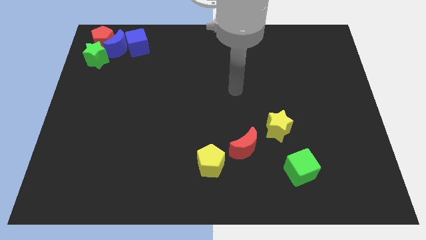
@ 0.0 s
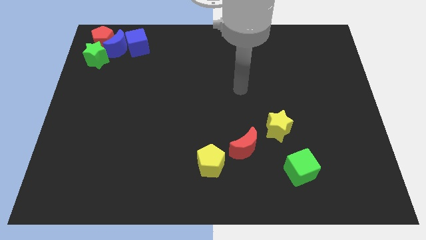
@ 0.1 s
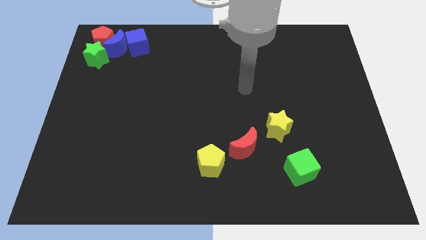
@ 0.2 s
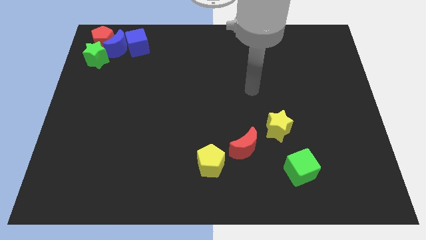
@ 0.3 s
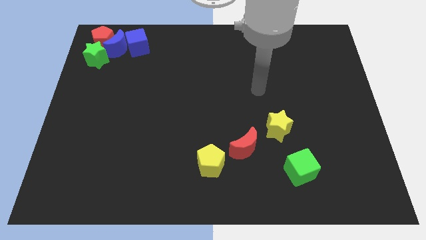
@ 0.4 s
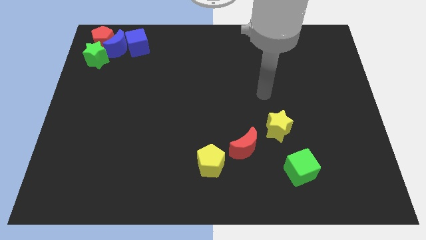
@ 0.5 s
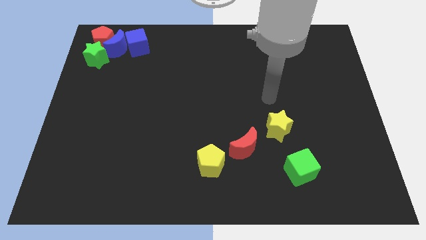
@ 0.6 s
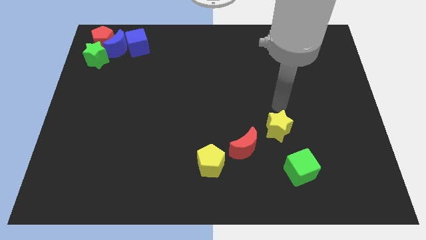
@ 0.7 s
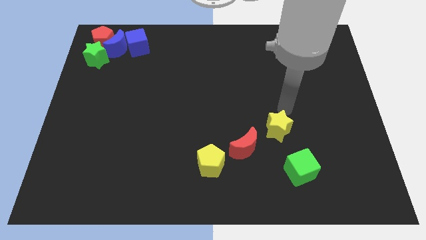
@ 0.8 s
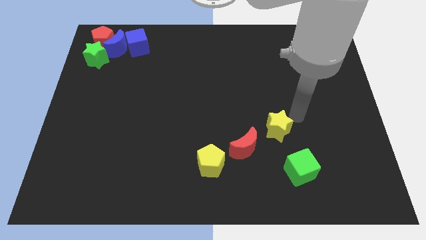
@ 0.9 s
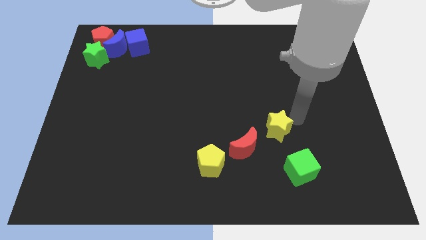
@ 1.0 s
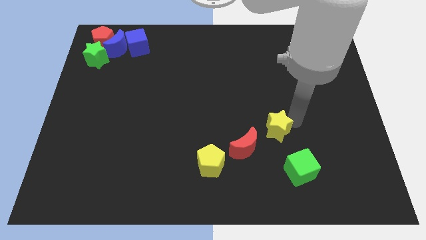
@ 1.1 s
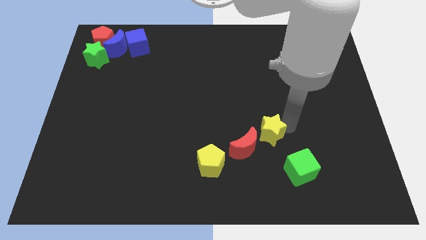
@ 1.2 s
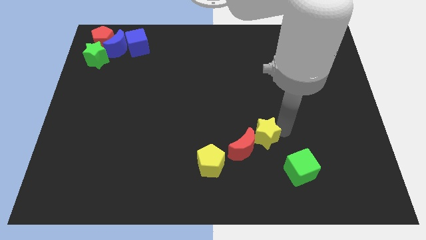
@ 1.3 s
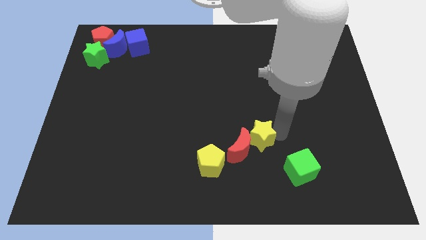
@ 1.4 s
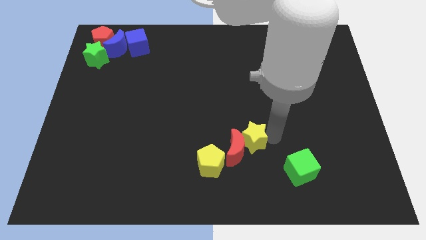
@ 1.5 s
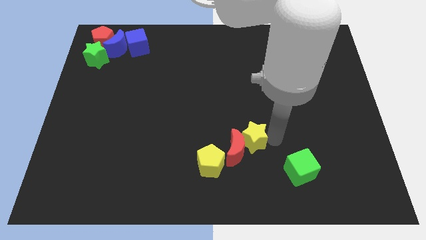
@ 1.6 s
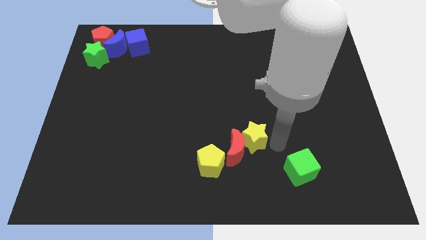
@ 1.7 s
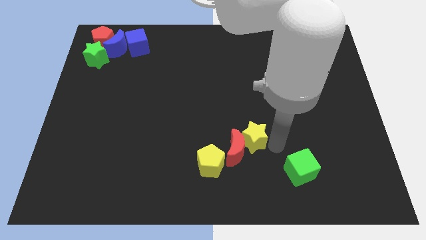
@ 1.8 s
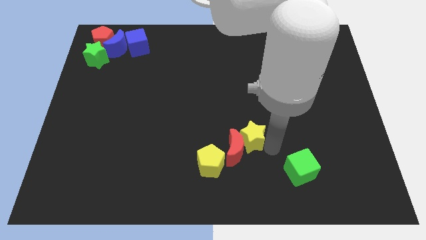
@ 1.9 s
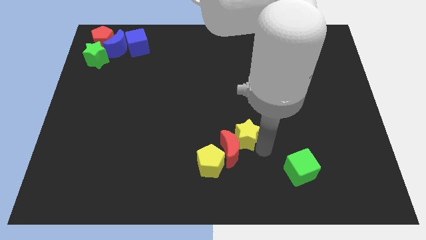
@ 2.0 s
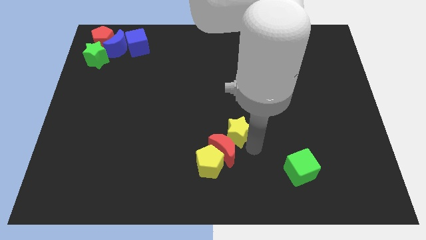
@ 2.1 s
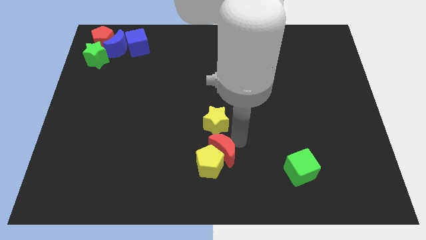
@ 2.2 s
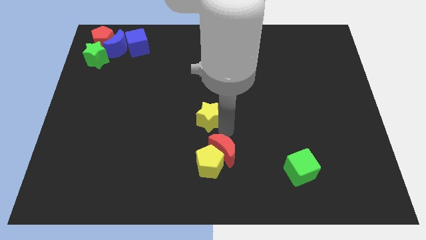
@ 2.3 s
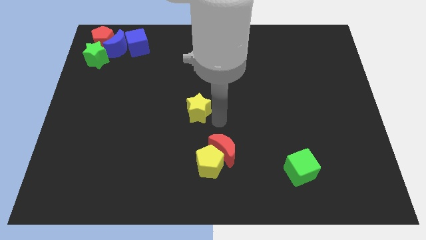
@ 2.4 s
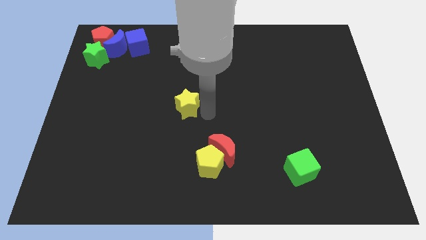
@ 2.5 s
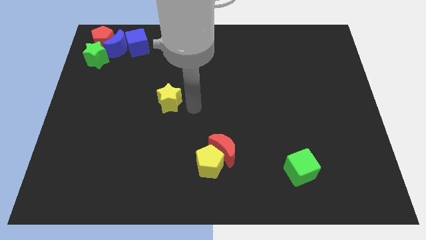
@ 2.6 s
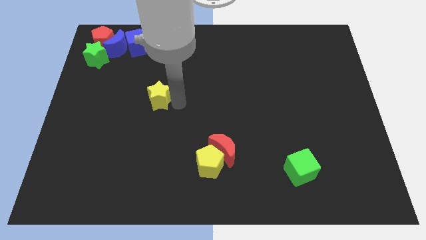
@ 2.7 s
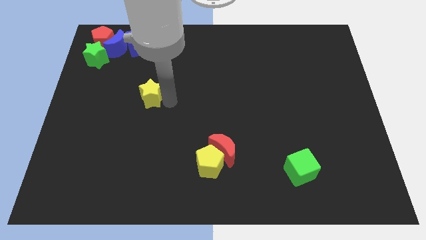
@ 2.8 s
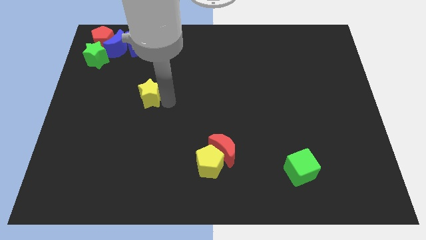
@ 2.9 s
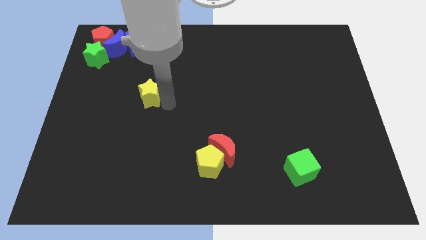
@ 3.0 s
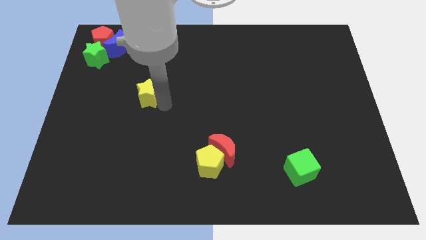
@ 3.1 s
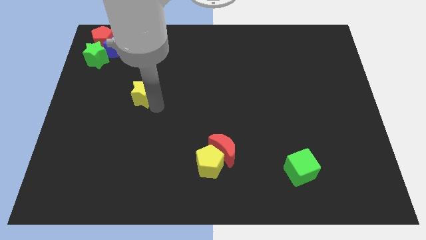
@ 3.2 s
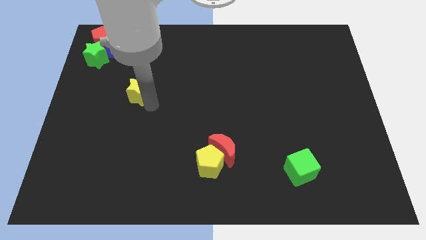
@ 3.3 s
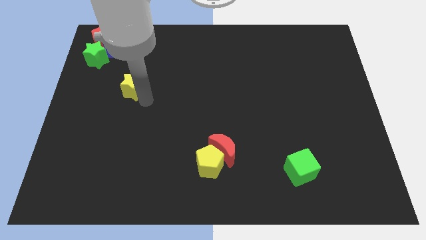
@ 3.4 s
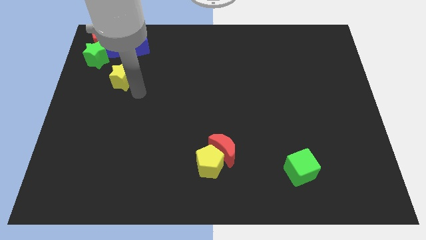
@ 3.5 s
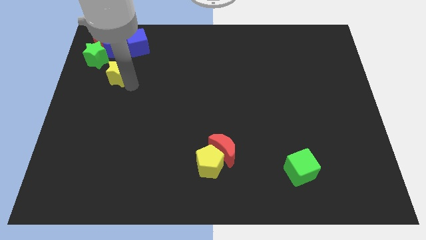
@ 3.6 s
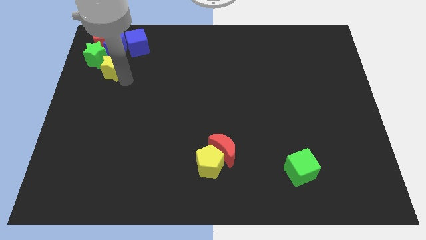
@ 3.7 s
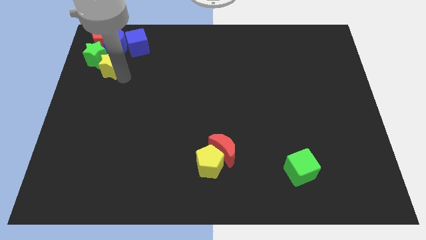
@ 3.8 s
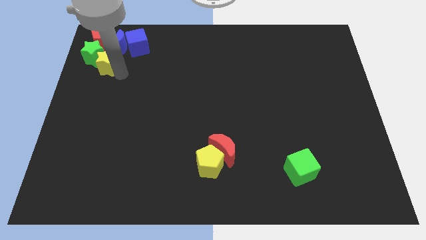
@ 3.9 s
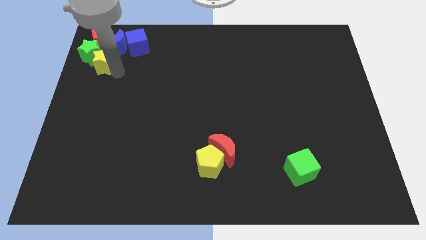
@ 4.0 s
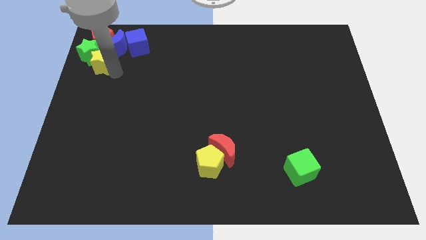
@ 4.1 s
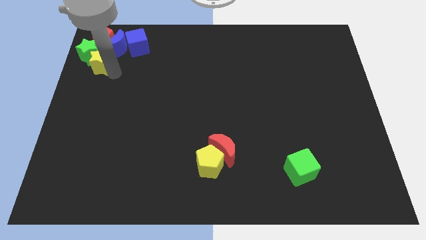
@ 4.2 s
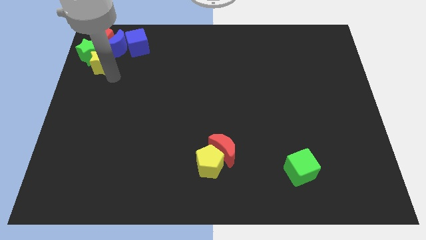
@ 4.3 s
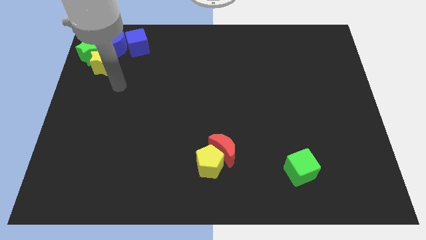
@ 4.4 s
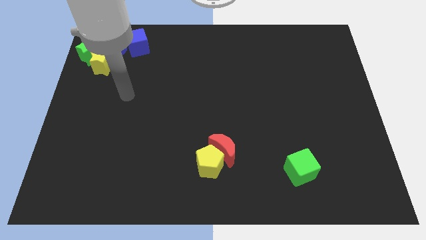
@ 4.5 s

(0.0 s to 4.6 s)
push the yellow star close to the green star

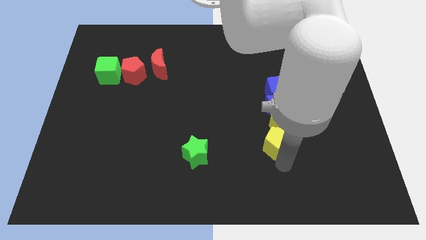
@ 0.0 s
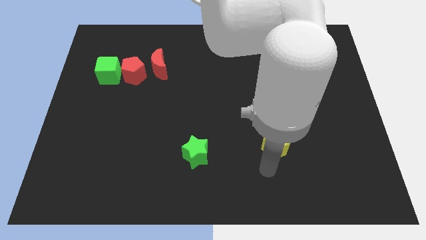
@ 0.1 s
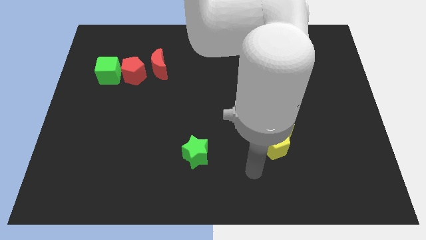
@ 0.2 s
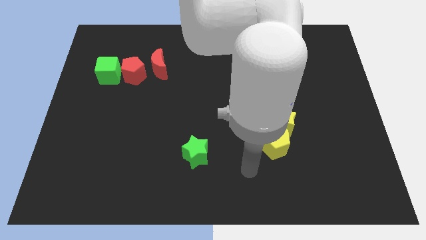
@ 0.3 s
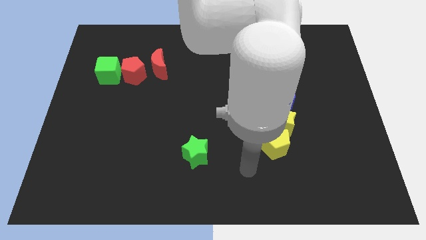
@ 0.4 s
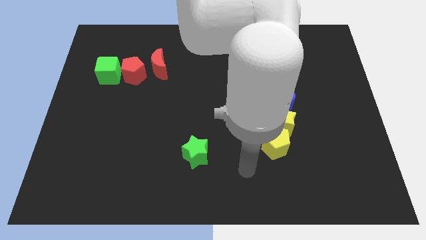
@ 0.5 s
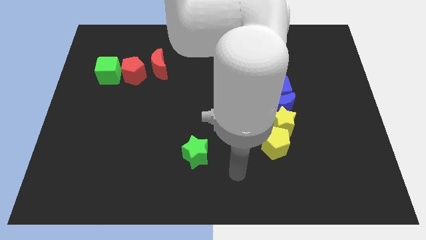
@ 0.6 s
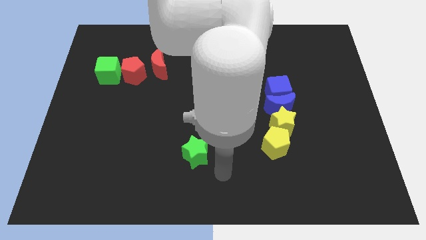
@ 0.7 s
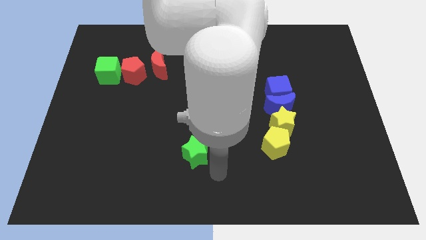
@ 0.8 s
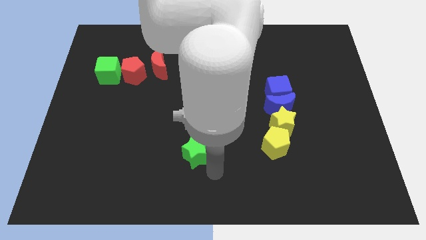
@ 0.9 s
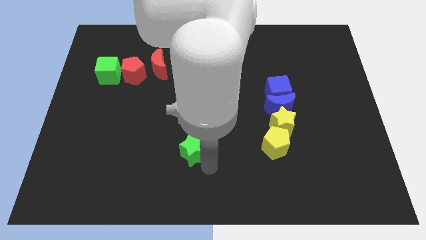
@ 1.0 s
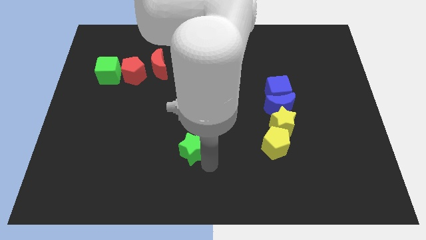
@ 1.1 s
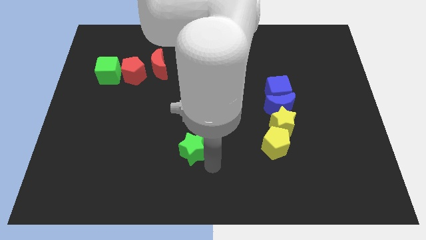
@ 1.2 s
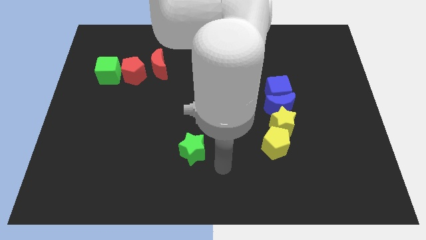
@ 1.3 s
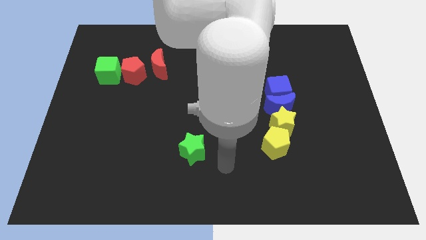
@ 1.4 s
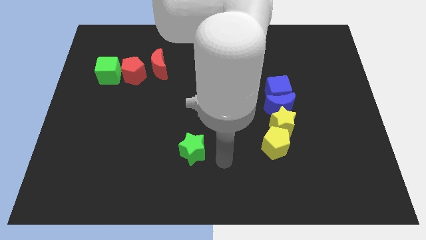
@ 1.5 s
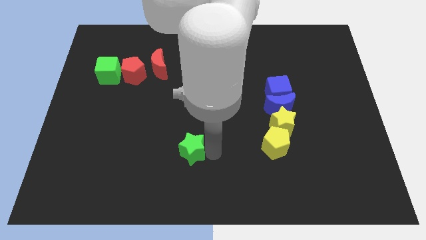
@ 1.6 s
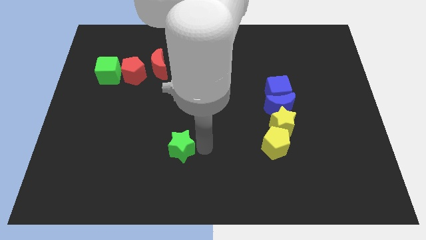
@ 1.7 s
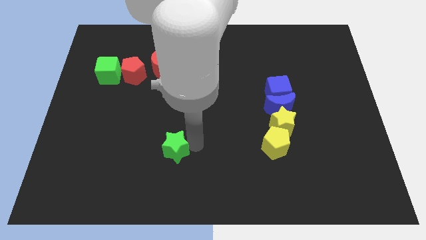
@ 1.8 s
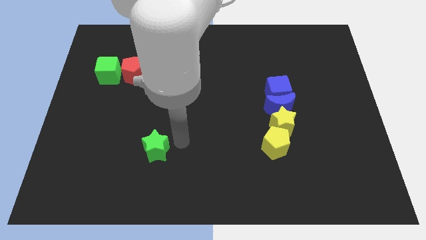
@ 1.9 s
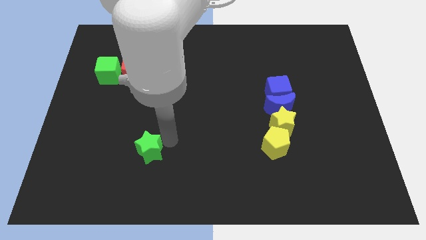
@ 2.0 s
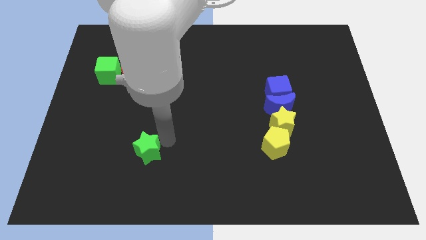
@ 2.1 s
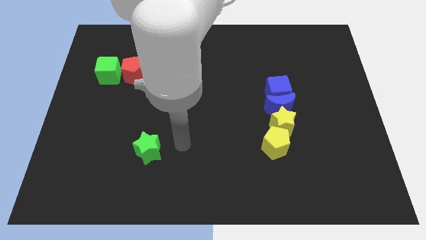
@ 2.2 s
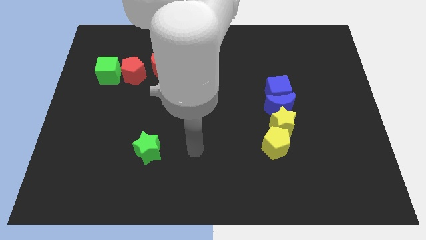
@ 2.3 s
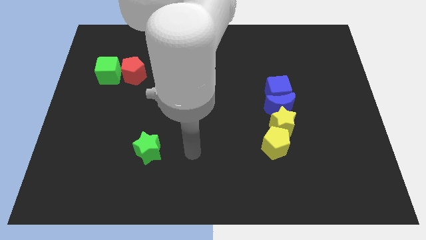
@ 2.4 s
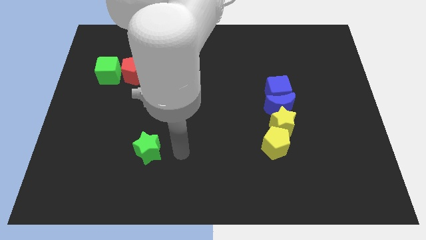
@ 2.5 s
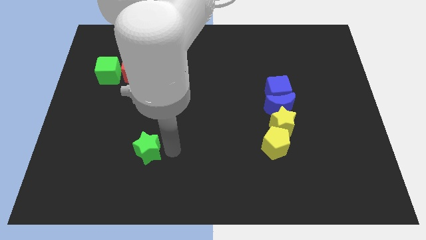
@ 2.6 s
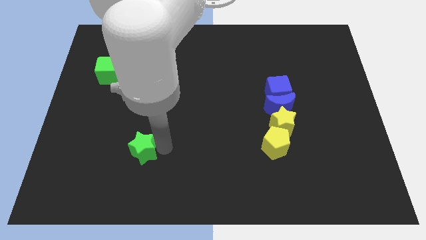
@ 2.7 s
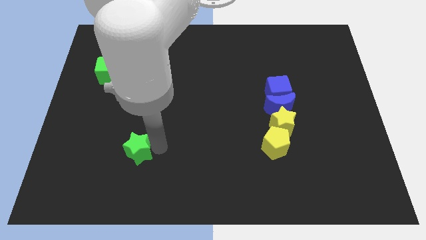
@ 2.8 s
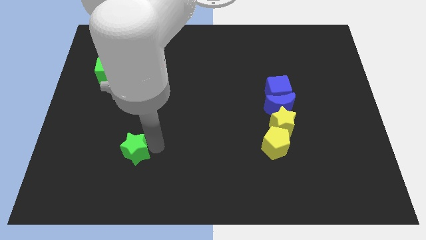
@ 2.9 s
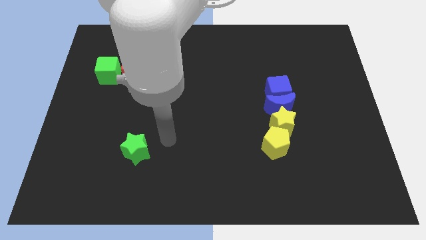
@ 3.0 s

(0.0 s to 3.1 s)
push the green star to the left side of the table

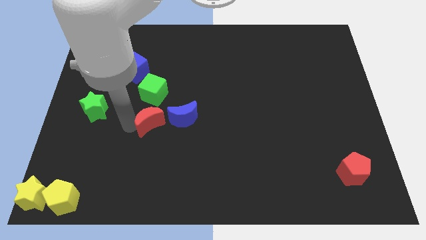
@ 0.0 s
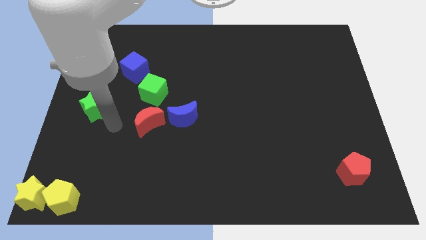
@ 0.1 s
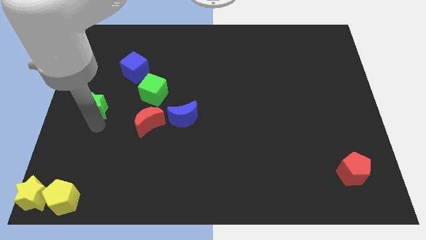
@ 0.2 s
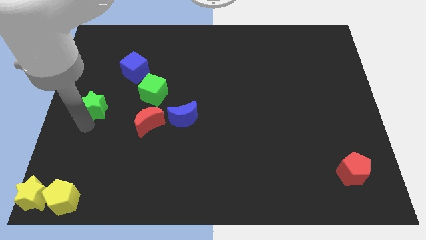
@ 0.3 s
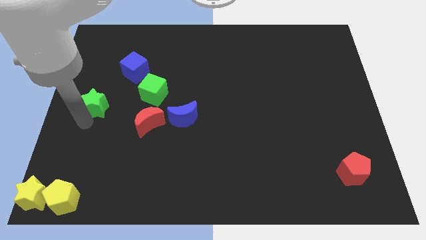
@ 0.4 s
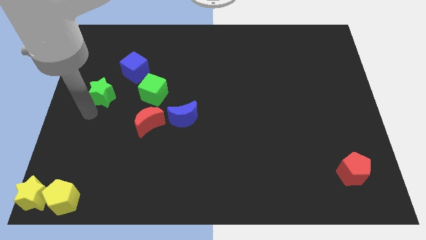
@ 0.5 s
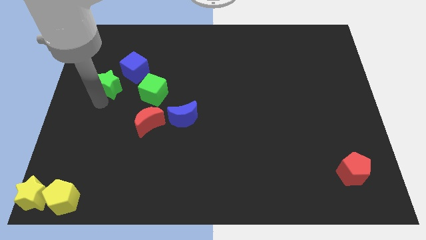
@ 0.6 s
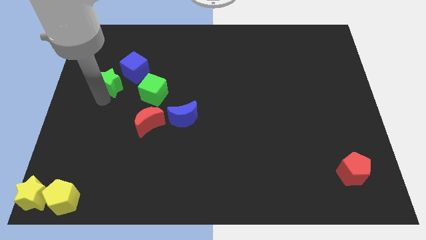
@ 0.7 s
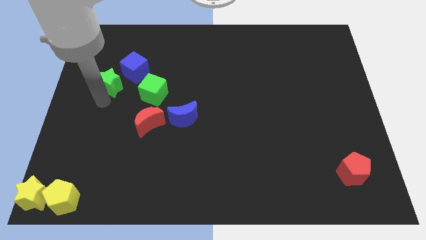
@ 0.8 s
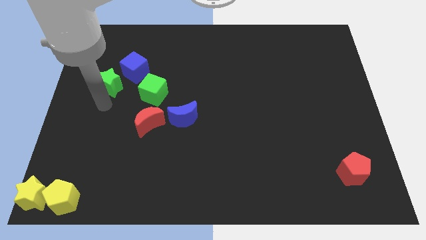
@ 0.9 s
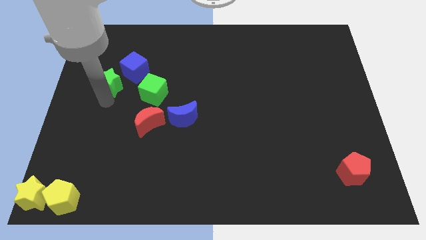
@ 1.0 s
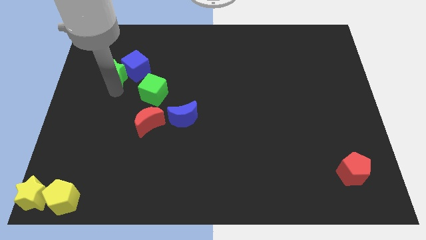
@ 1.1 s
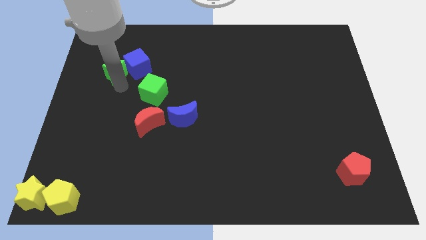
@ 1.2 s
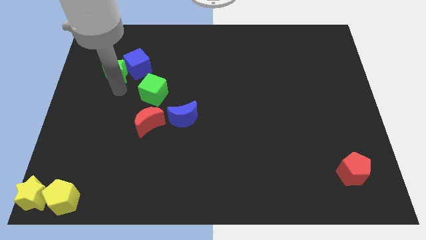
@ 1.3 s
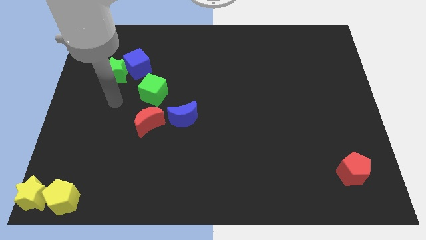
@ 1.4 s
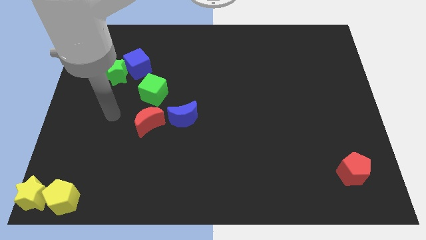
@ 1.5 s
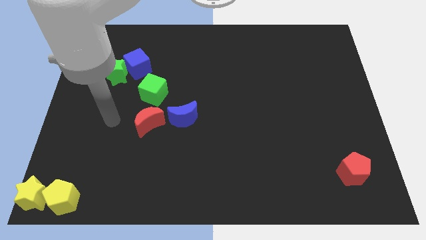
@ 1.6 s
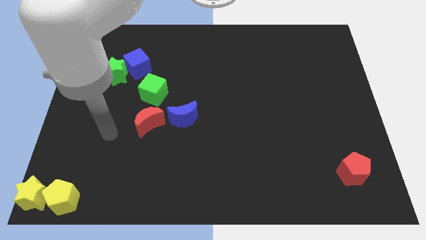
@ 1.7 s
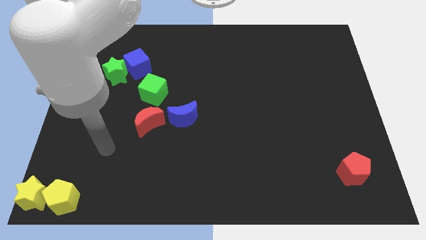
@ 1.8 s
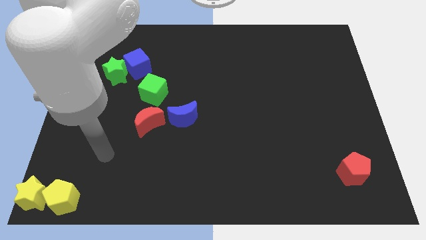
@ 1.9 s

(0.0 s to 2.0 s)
push the green star into blue cube
